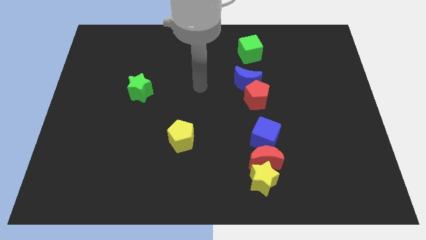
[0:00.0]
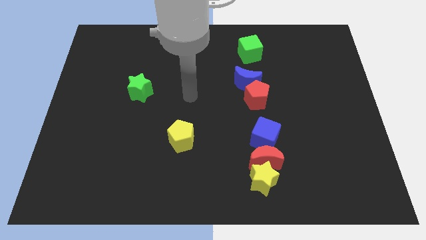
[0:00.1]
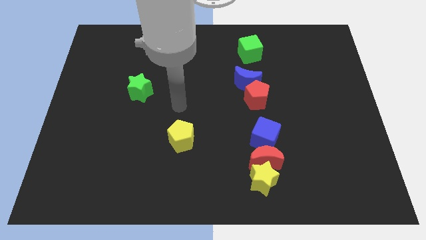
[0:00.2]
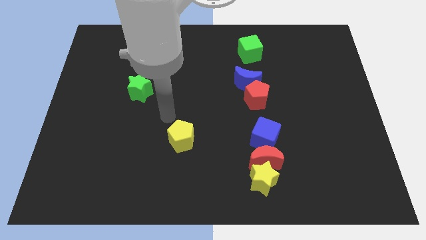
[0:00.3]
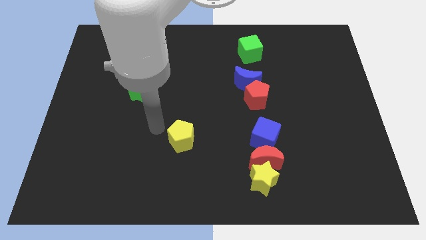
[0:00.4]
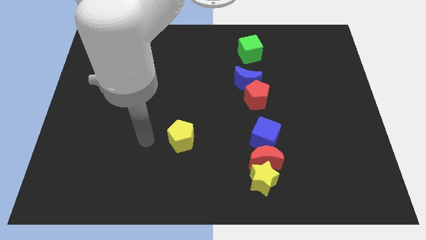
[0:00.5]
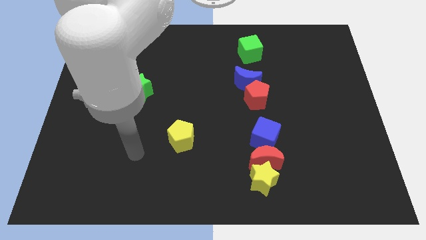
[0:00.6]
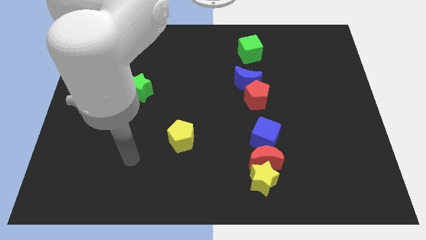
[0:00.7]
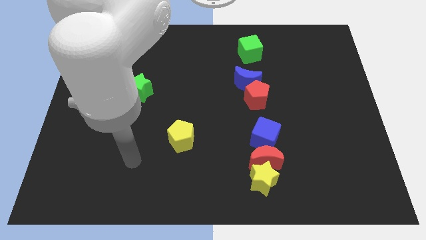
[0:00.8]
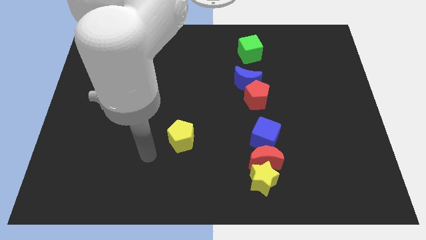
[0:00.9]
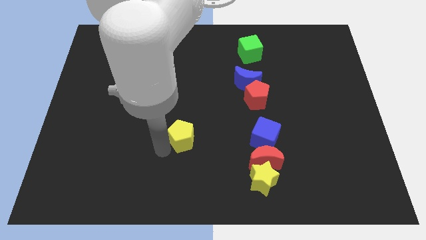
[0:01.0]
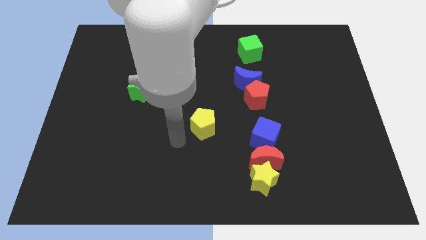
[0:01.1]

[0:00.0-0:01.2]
move the yellow pentagon to the center of the board

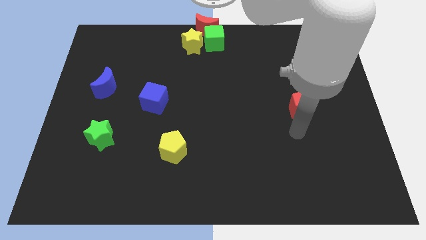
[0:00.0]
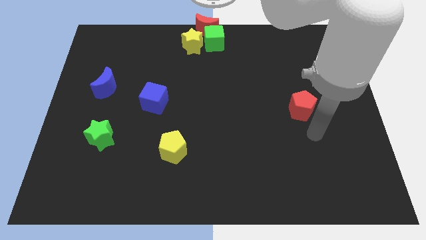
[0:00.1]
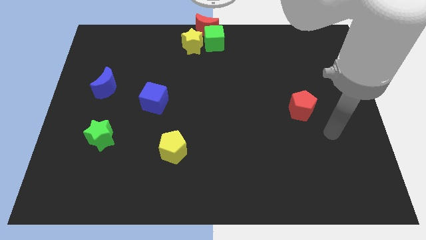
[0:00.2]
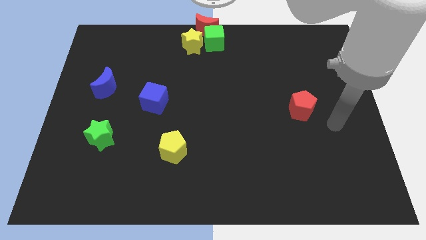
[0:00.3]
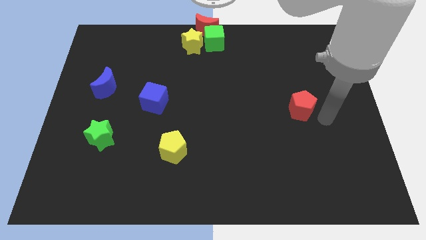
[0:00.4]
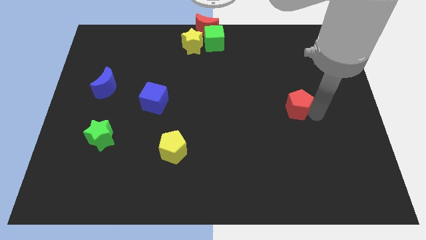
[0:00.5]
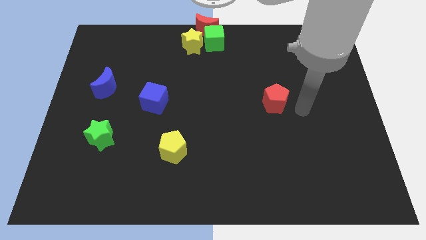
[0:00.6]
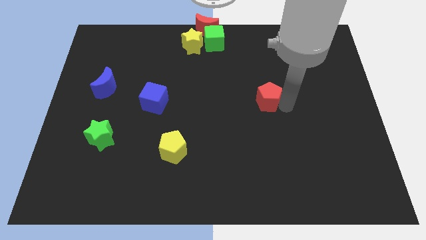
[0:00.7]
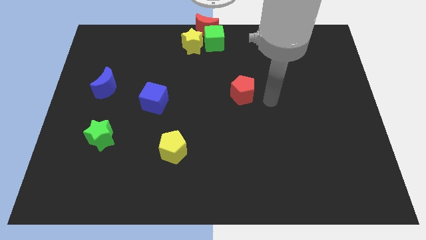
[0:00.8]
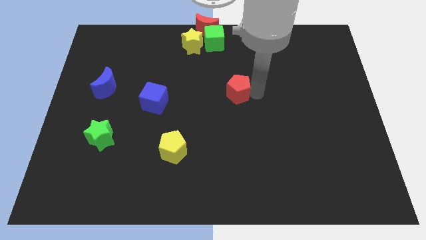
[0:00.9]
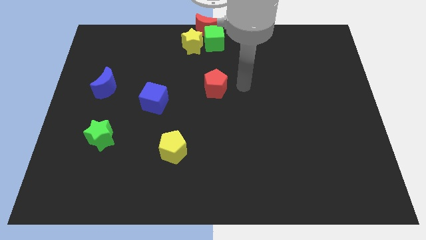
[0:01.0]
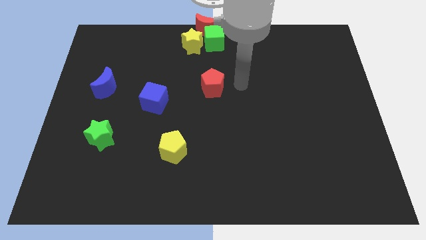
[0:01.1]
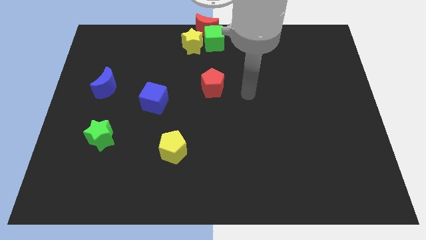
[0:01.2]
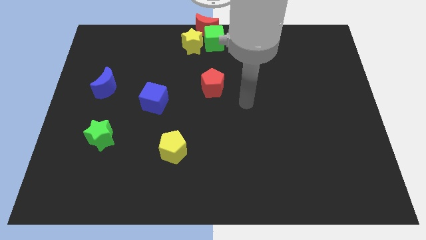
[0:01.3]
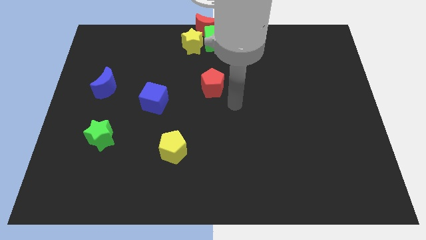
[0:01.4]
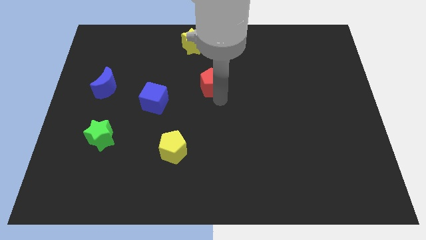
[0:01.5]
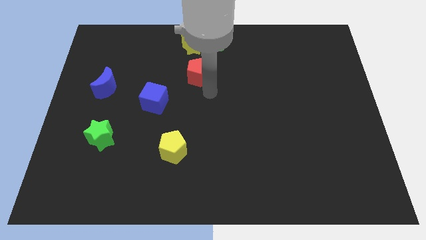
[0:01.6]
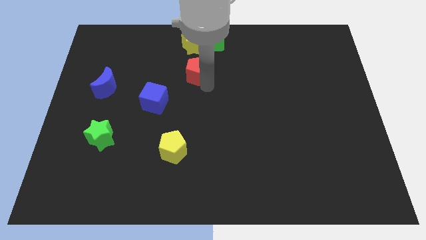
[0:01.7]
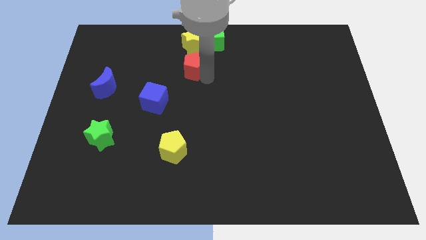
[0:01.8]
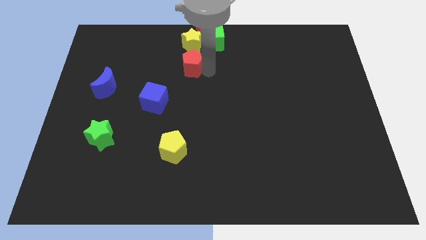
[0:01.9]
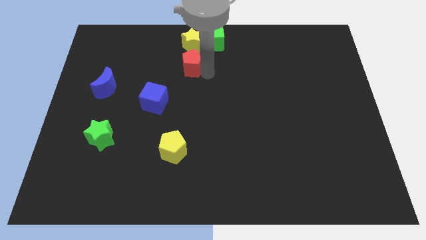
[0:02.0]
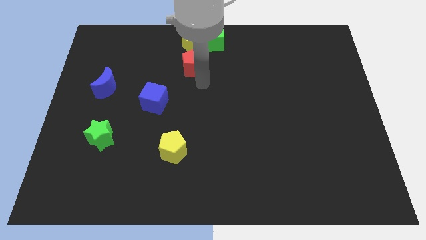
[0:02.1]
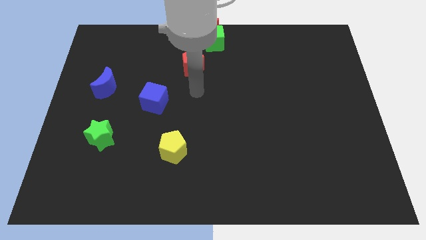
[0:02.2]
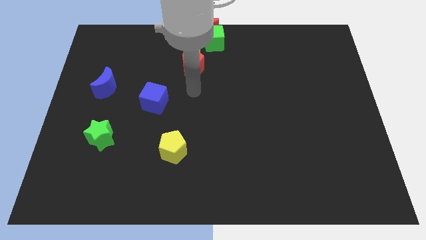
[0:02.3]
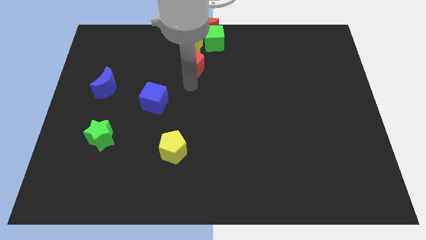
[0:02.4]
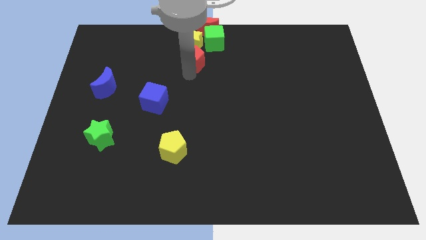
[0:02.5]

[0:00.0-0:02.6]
move red pentagon towards the yellow star

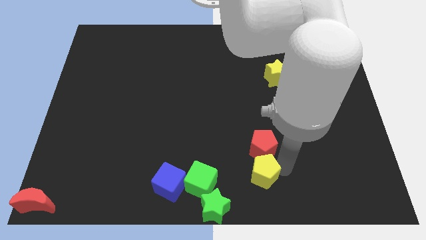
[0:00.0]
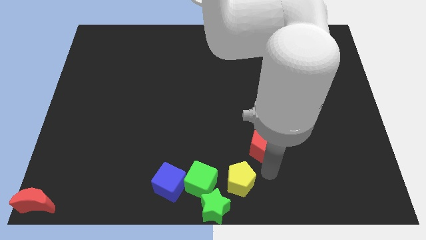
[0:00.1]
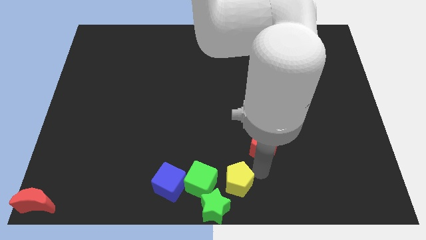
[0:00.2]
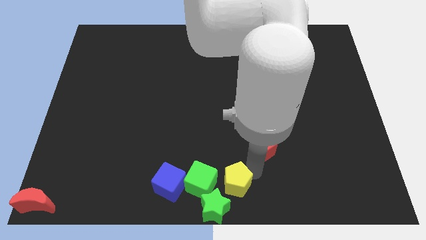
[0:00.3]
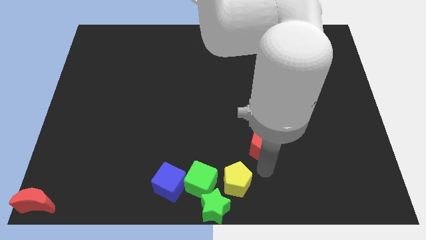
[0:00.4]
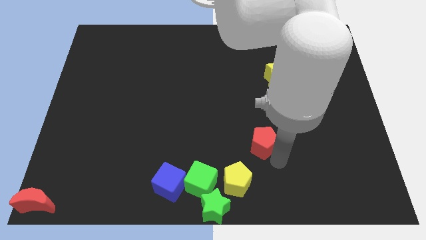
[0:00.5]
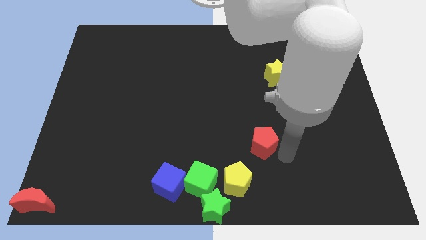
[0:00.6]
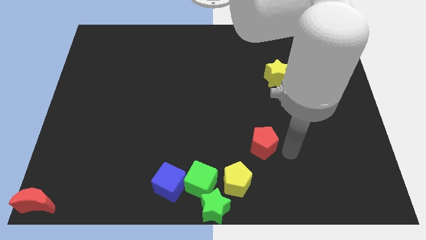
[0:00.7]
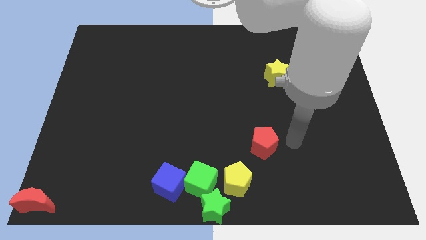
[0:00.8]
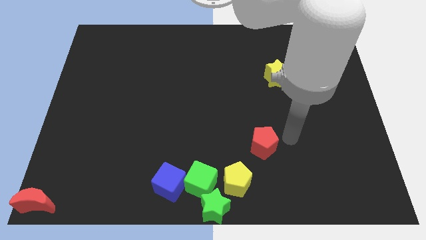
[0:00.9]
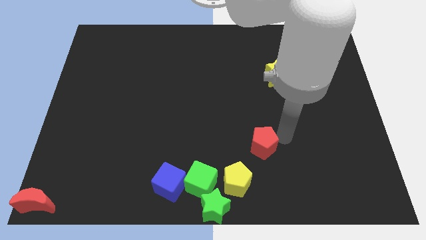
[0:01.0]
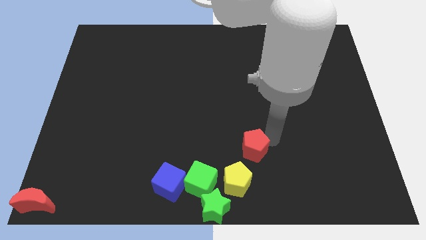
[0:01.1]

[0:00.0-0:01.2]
move the yellow pentagon slightly left

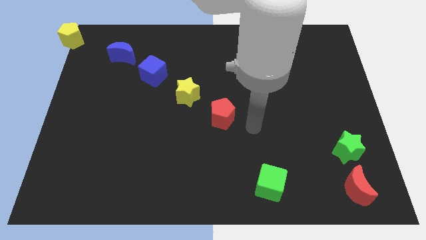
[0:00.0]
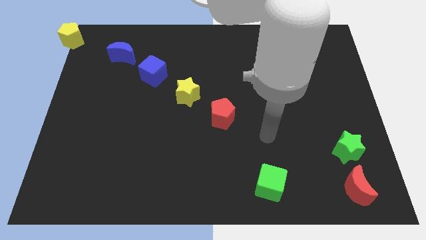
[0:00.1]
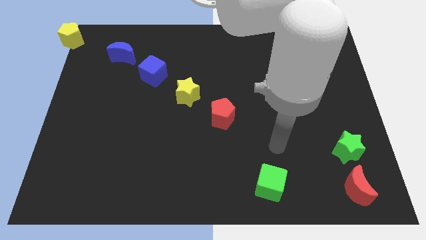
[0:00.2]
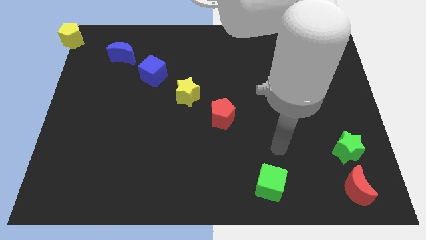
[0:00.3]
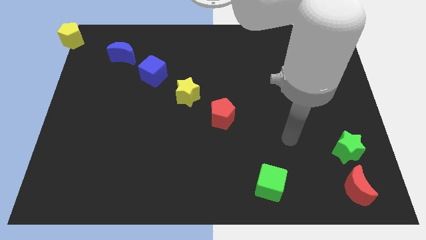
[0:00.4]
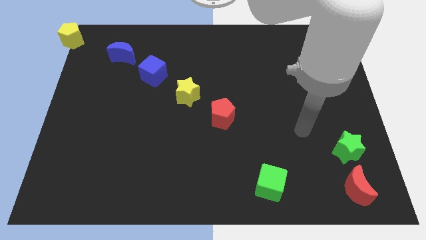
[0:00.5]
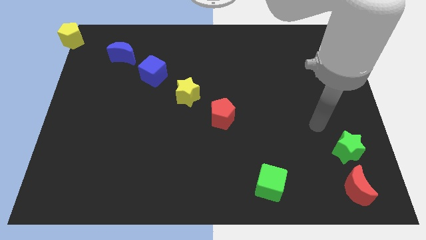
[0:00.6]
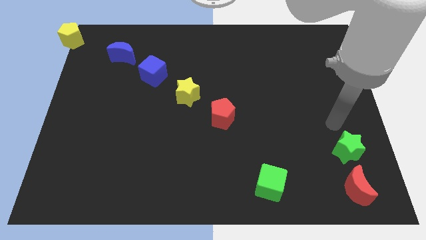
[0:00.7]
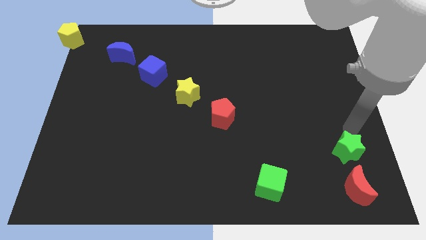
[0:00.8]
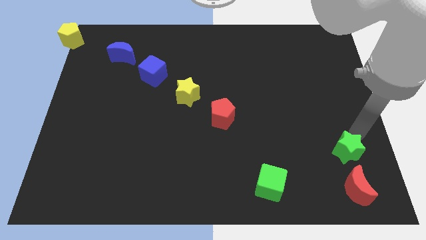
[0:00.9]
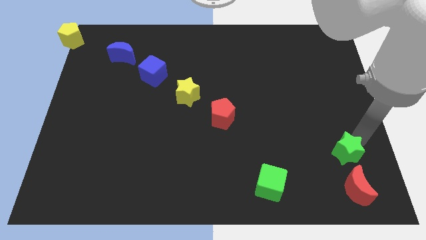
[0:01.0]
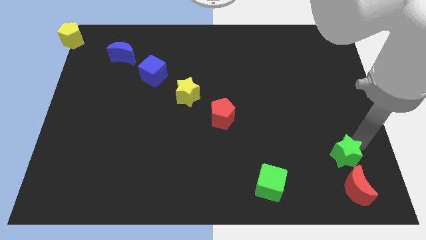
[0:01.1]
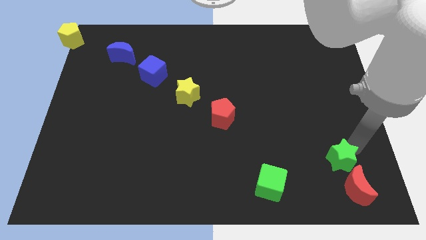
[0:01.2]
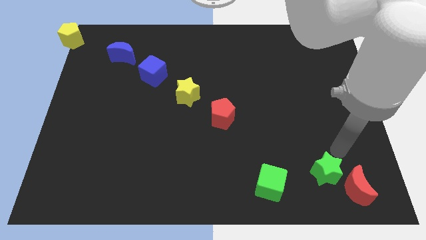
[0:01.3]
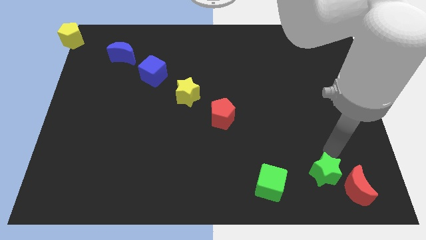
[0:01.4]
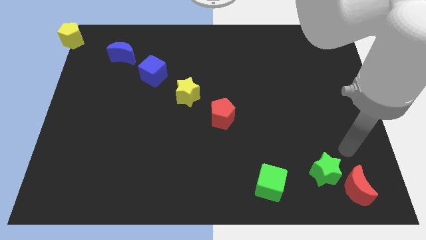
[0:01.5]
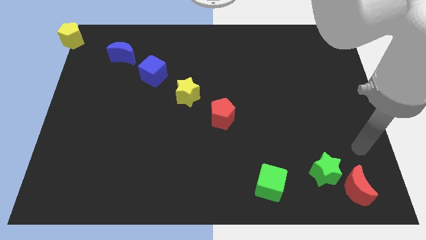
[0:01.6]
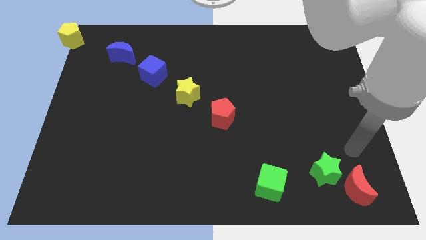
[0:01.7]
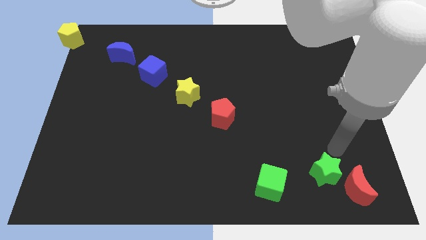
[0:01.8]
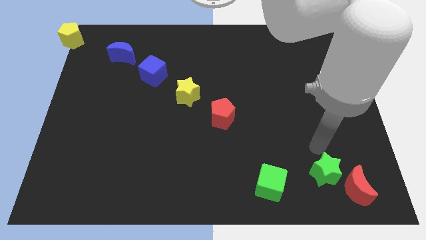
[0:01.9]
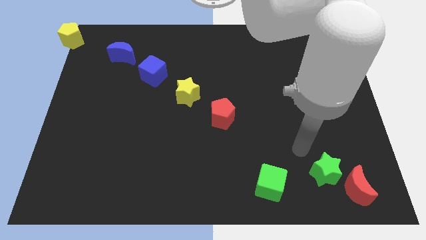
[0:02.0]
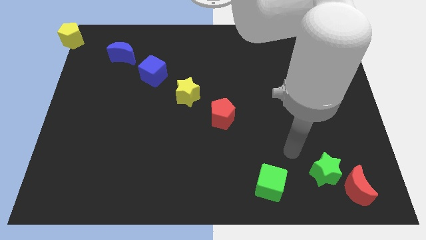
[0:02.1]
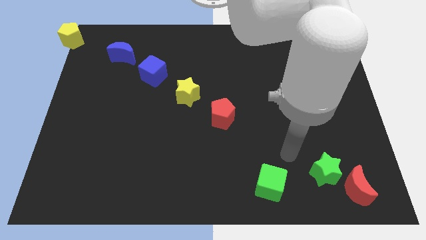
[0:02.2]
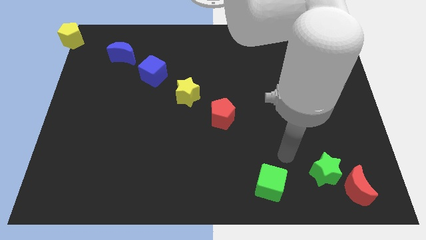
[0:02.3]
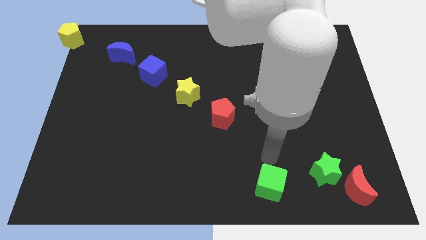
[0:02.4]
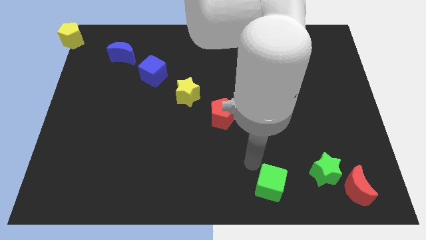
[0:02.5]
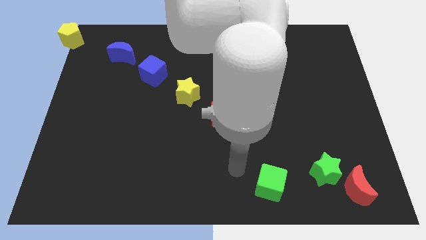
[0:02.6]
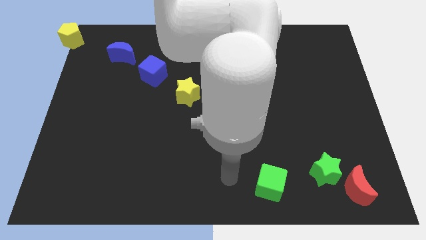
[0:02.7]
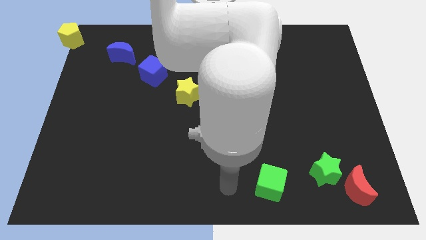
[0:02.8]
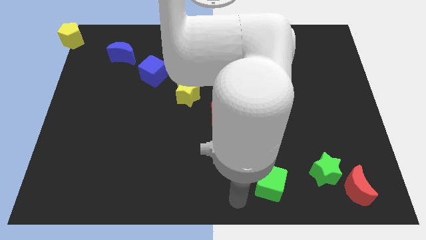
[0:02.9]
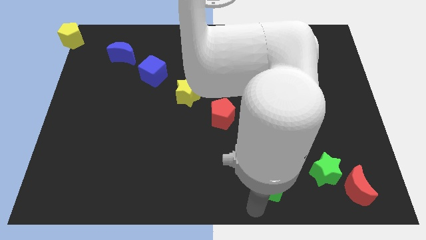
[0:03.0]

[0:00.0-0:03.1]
place the green star at the left side of the red moon

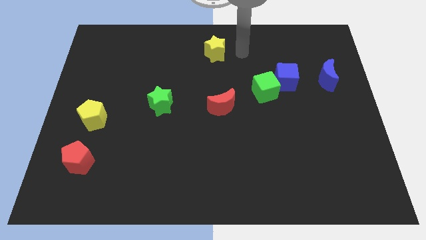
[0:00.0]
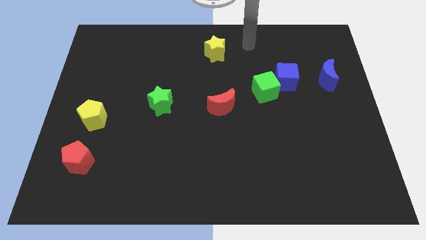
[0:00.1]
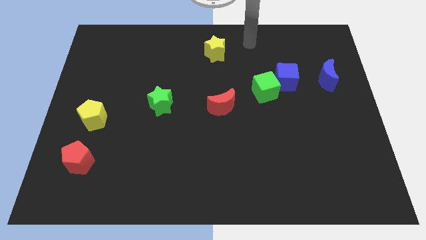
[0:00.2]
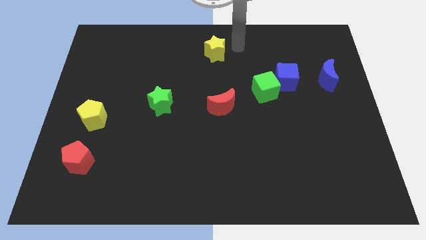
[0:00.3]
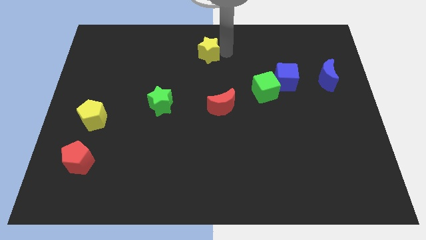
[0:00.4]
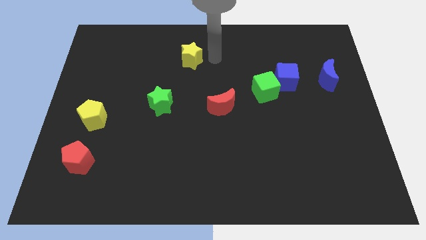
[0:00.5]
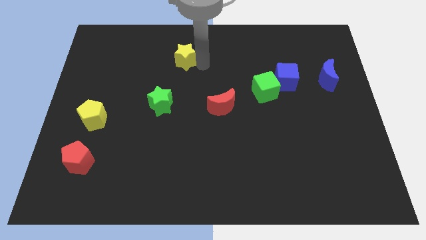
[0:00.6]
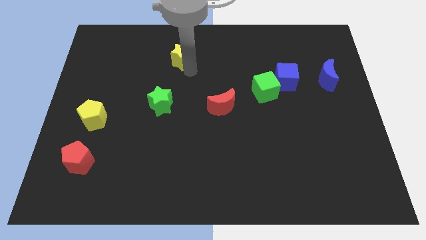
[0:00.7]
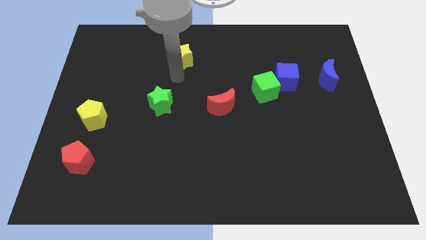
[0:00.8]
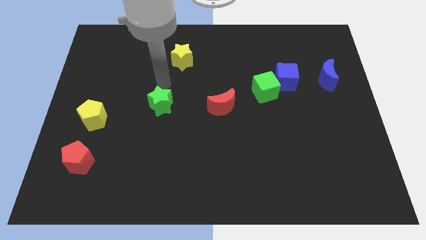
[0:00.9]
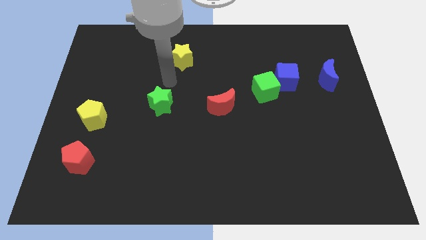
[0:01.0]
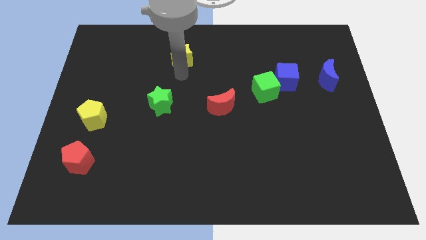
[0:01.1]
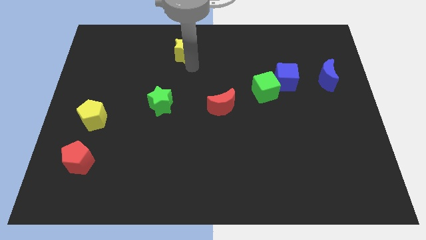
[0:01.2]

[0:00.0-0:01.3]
move yellow star slightly to the left
